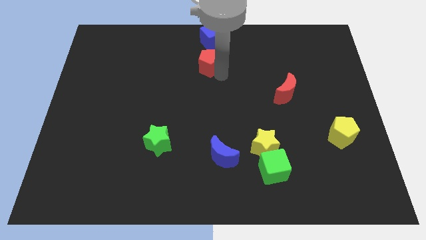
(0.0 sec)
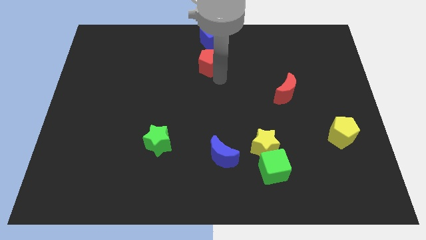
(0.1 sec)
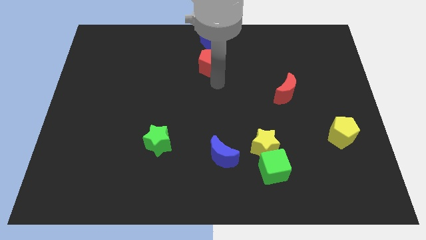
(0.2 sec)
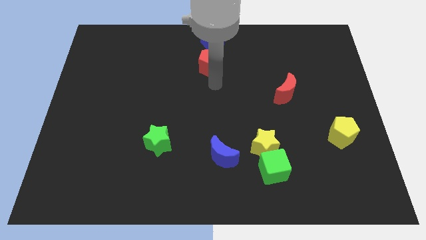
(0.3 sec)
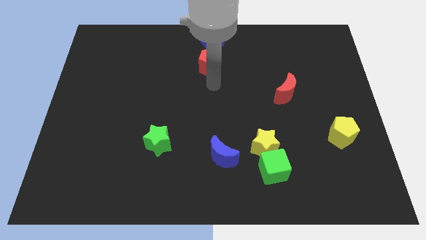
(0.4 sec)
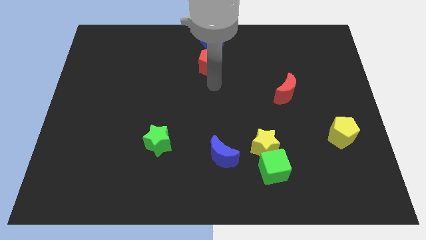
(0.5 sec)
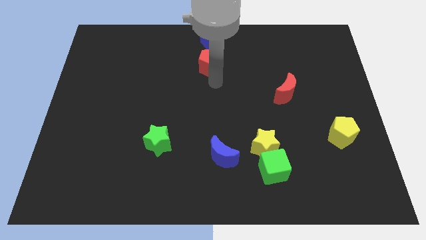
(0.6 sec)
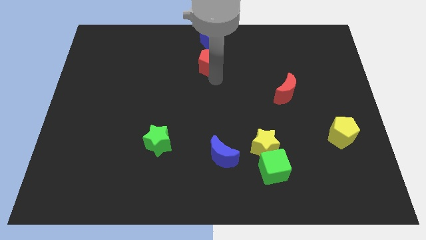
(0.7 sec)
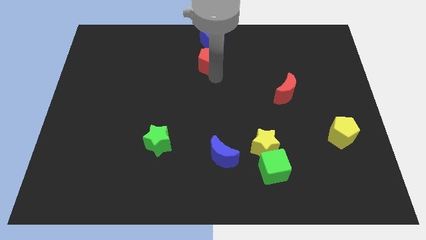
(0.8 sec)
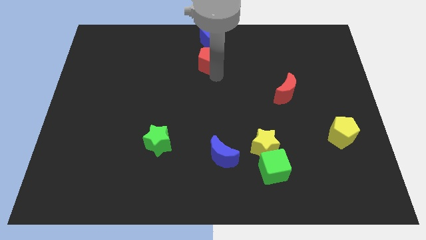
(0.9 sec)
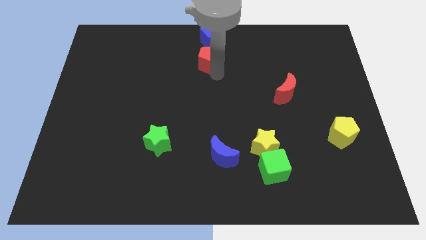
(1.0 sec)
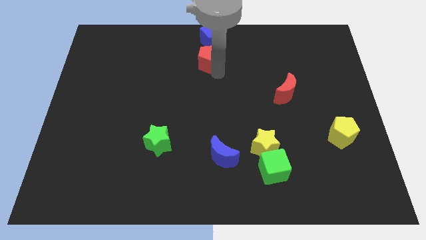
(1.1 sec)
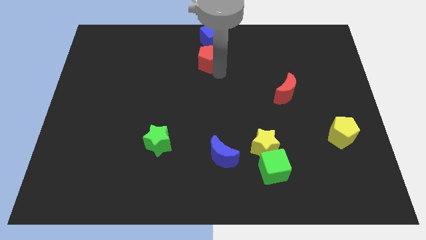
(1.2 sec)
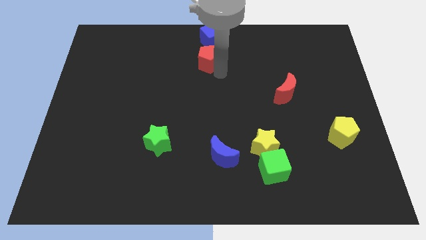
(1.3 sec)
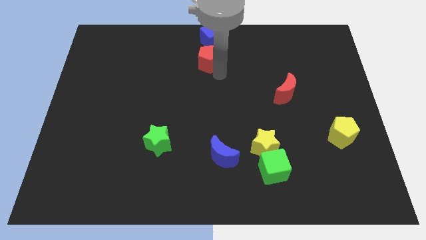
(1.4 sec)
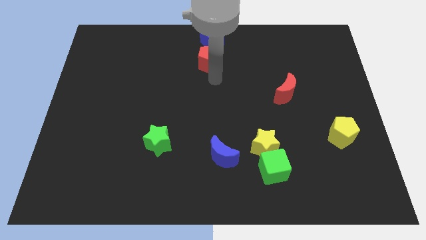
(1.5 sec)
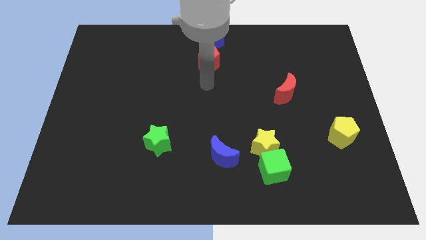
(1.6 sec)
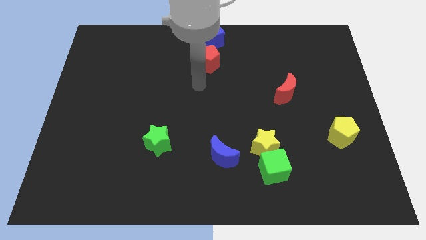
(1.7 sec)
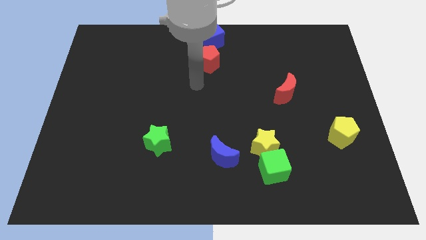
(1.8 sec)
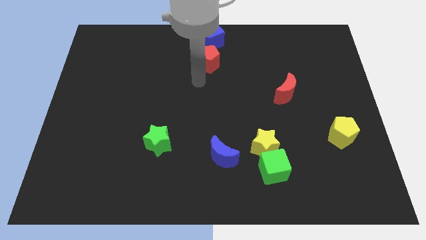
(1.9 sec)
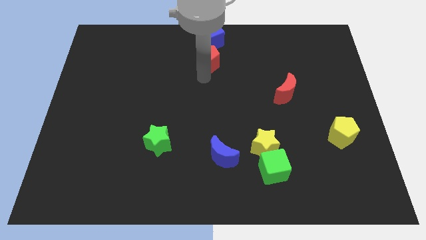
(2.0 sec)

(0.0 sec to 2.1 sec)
place the red pentagon to the bottom of the blue cube

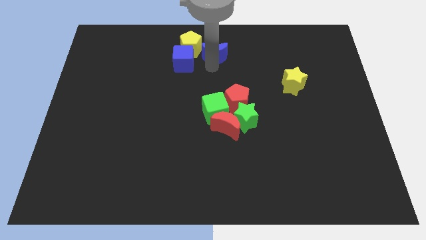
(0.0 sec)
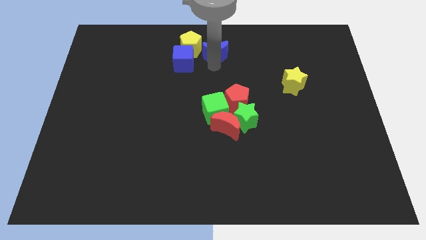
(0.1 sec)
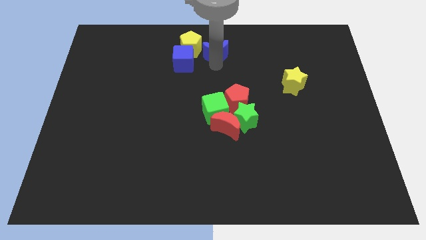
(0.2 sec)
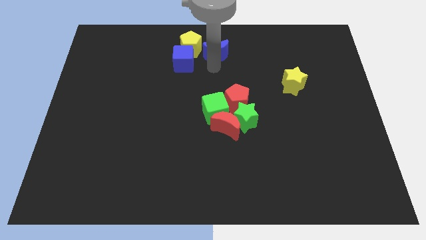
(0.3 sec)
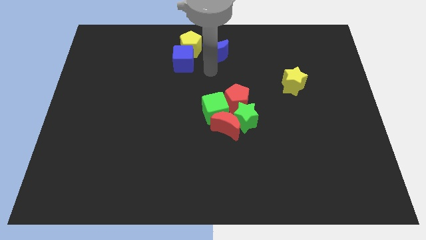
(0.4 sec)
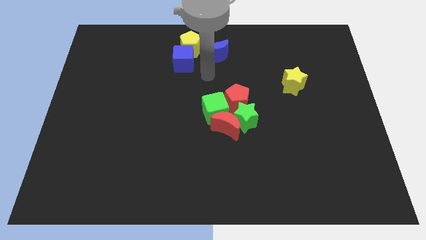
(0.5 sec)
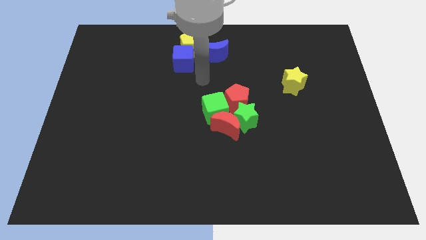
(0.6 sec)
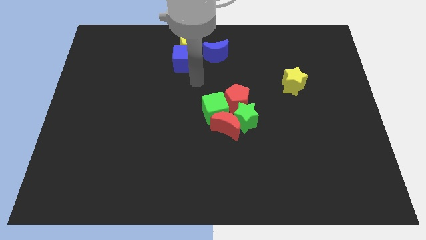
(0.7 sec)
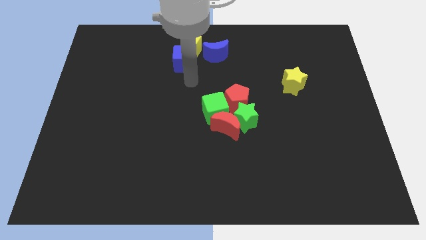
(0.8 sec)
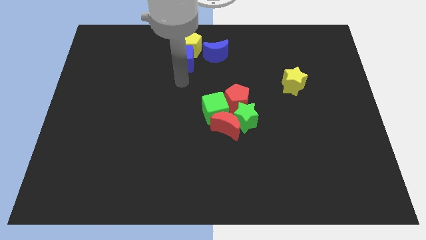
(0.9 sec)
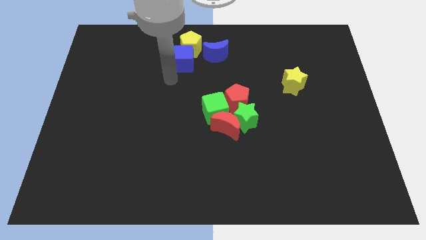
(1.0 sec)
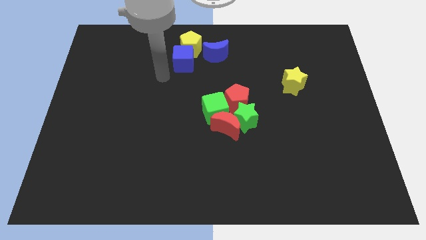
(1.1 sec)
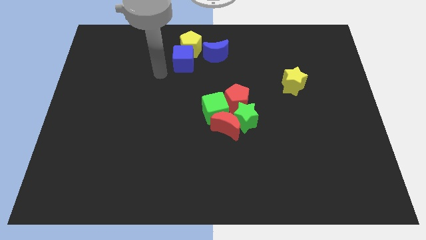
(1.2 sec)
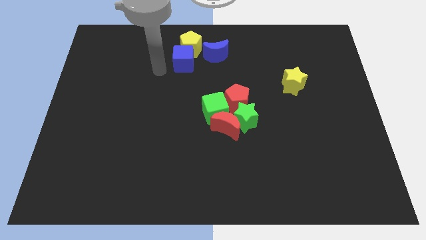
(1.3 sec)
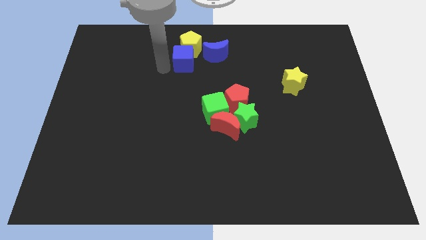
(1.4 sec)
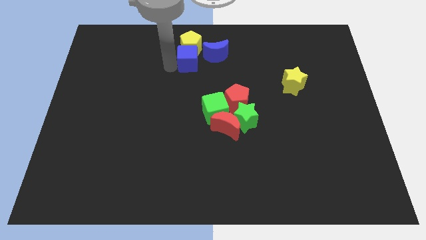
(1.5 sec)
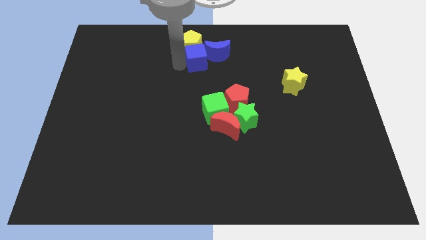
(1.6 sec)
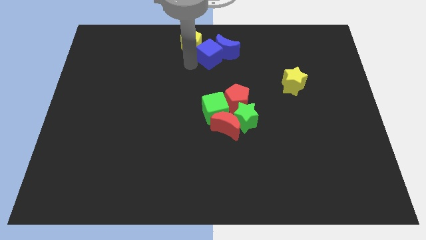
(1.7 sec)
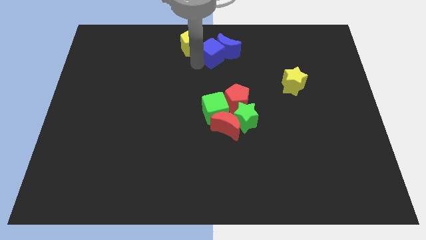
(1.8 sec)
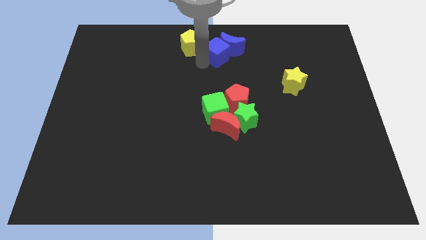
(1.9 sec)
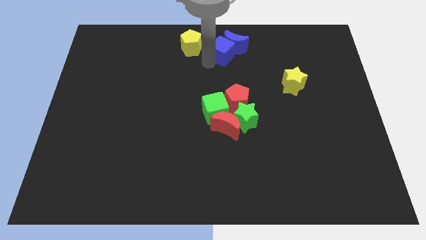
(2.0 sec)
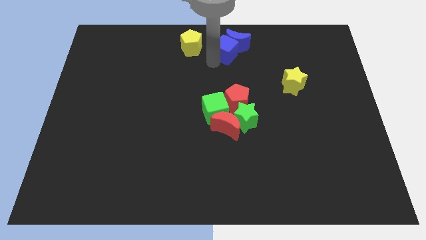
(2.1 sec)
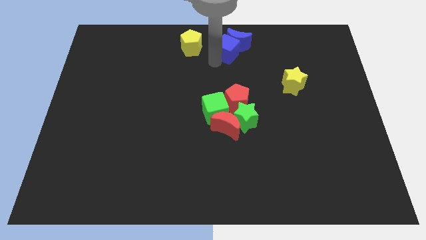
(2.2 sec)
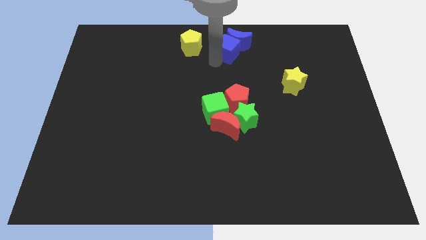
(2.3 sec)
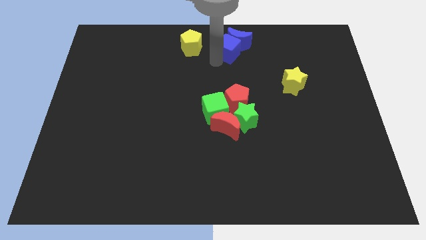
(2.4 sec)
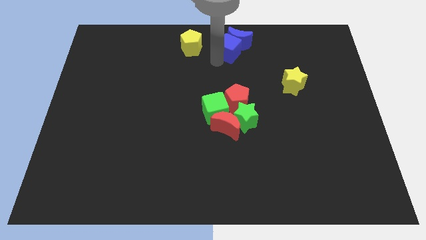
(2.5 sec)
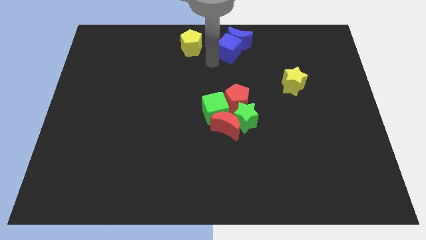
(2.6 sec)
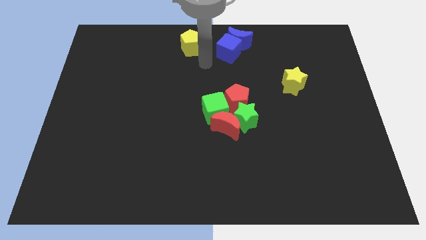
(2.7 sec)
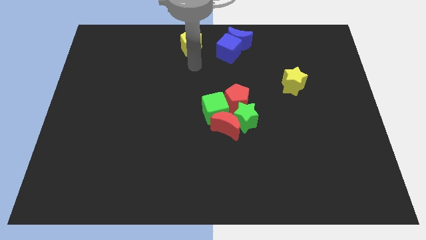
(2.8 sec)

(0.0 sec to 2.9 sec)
push blue cube into blue crescent

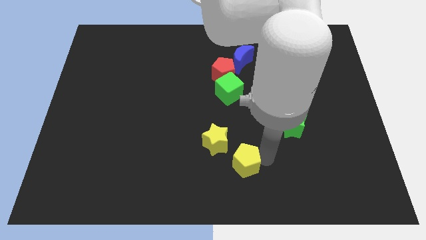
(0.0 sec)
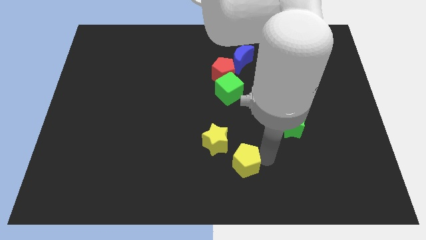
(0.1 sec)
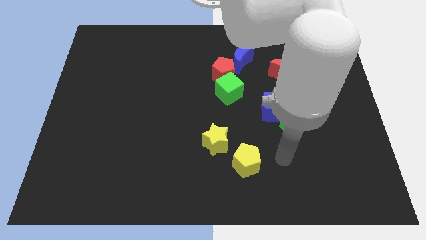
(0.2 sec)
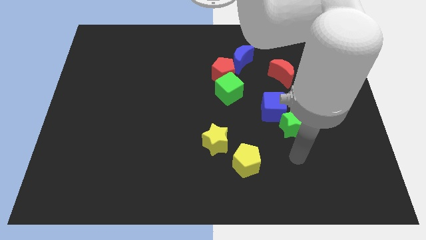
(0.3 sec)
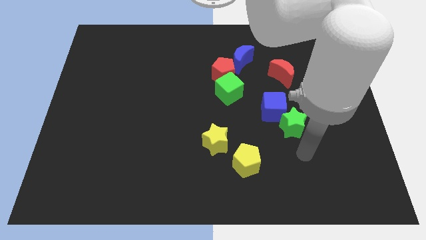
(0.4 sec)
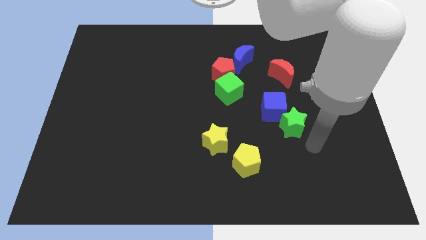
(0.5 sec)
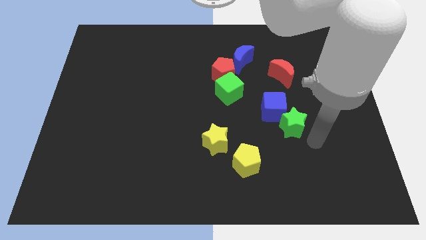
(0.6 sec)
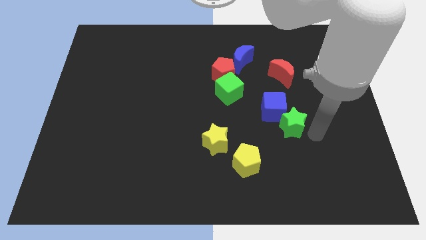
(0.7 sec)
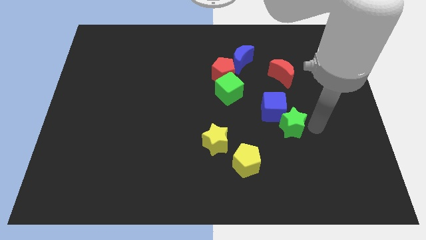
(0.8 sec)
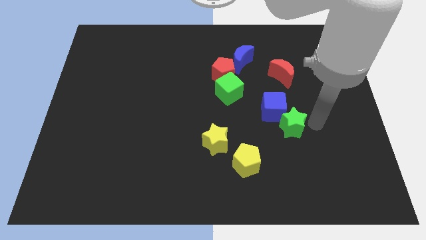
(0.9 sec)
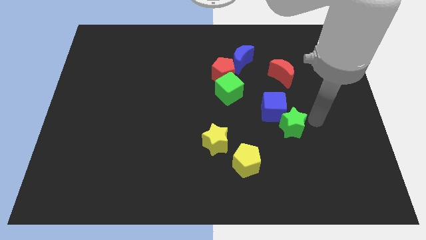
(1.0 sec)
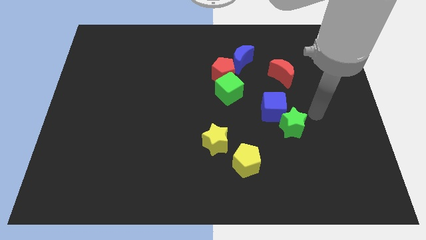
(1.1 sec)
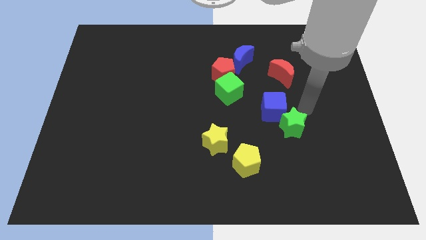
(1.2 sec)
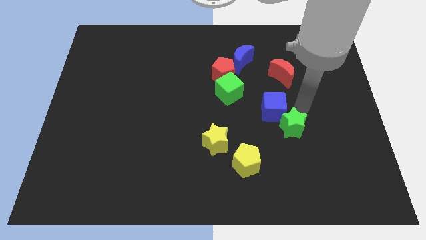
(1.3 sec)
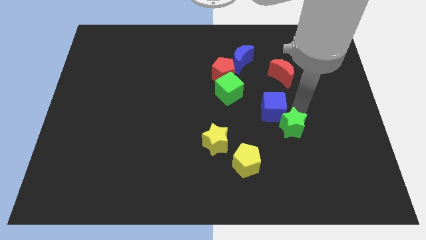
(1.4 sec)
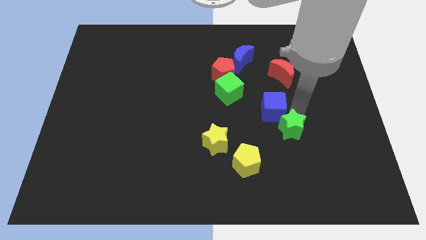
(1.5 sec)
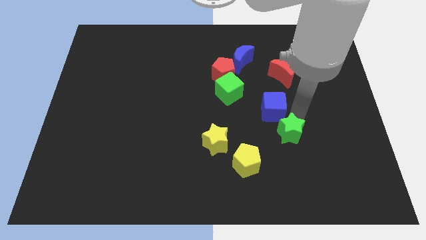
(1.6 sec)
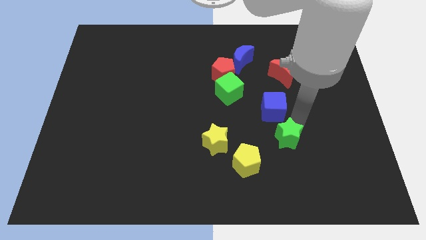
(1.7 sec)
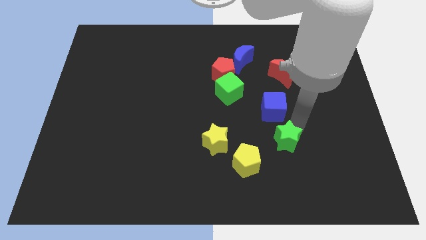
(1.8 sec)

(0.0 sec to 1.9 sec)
place the green star parallel right to the yellow star

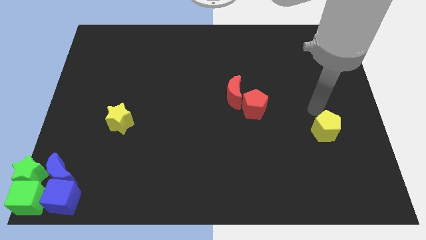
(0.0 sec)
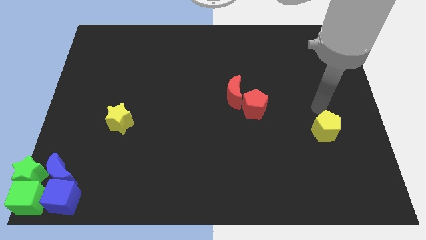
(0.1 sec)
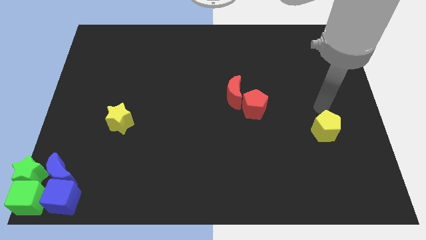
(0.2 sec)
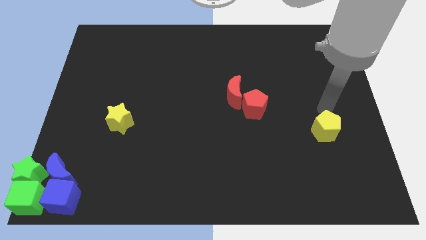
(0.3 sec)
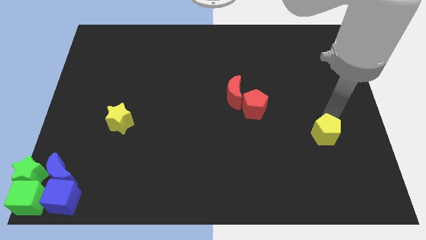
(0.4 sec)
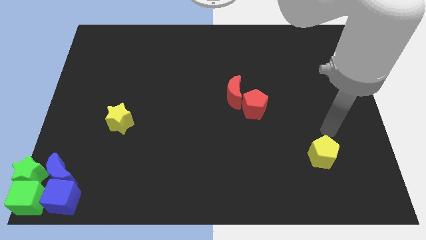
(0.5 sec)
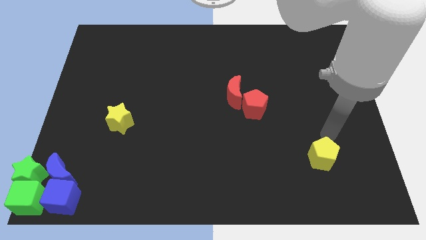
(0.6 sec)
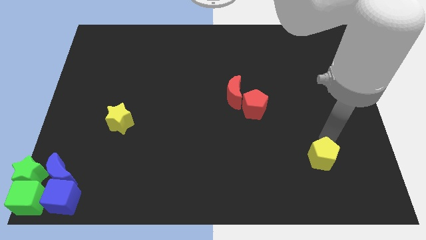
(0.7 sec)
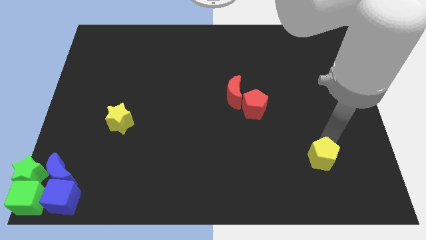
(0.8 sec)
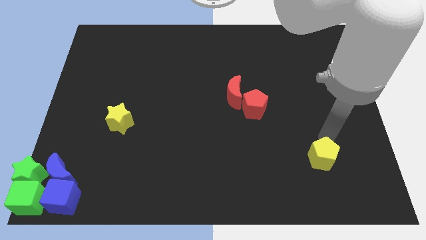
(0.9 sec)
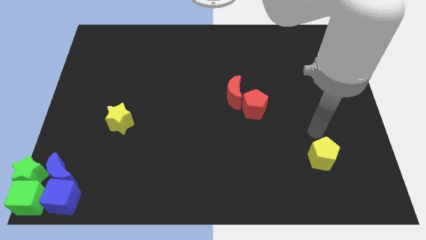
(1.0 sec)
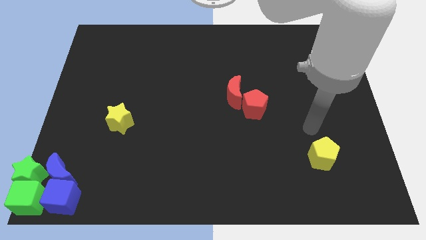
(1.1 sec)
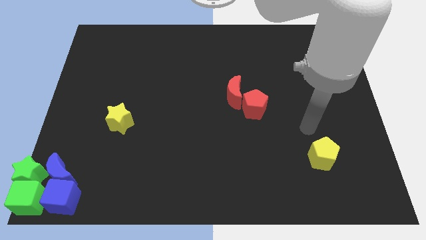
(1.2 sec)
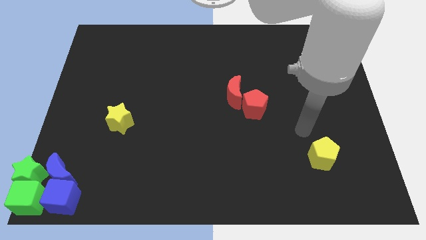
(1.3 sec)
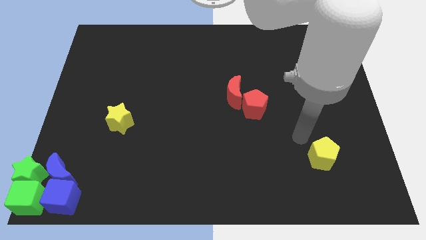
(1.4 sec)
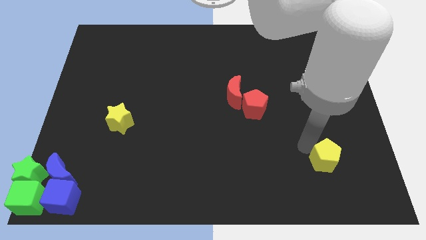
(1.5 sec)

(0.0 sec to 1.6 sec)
move the yellow pentagon to the bottom of the board

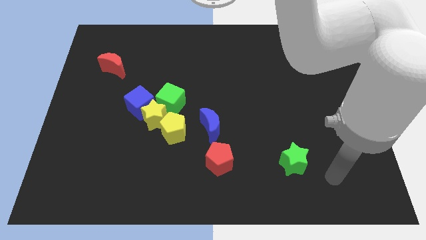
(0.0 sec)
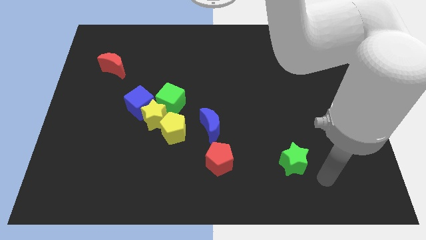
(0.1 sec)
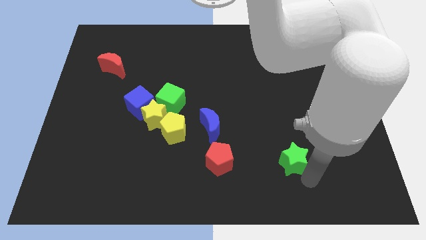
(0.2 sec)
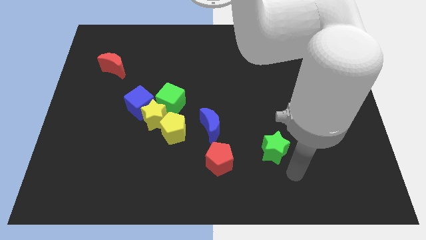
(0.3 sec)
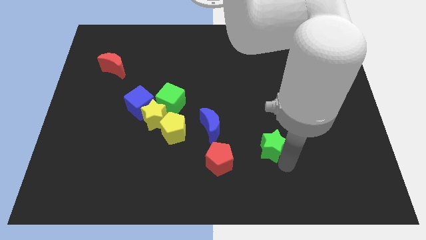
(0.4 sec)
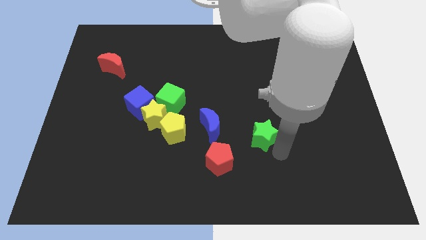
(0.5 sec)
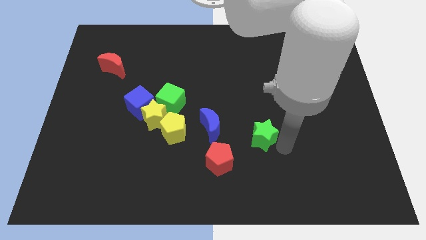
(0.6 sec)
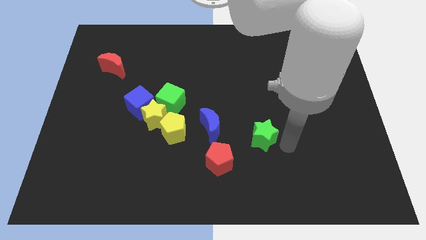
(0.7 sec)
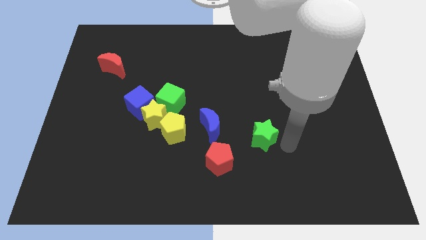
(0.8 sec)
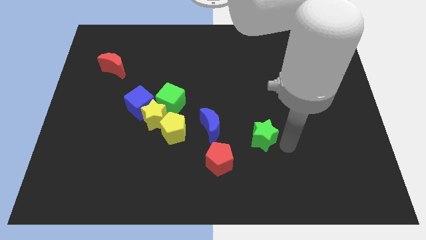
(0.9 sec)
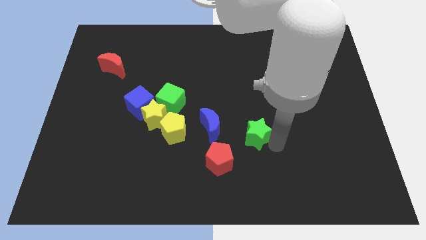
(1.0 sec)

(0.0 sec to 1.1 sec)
slide the green star up slightly
